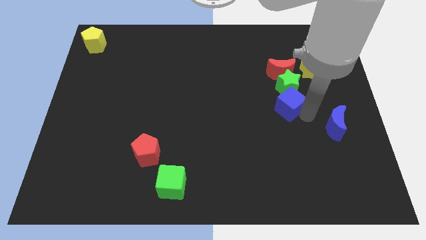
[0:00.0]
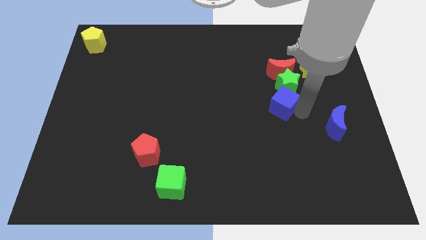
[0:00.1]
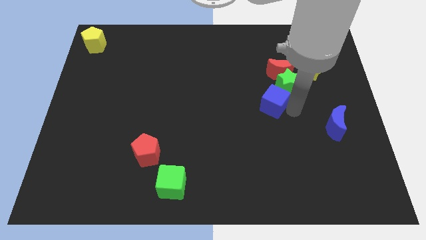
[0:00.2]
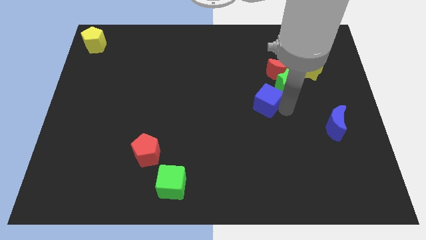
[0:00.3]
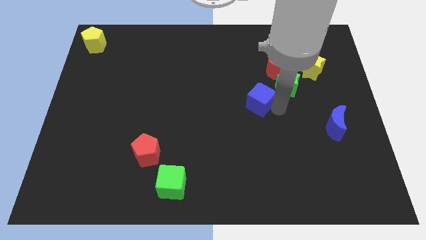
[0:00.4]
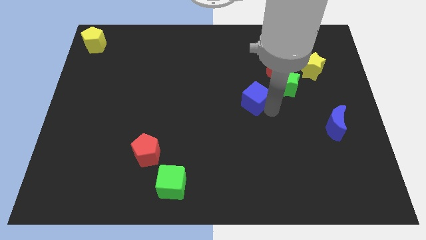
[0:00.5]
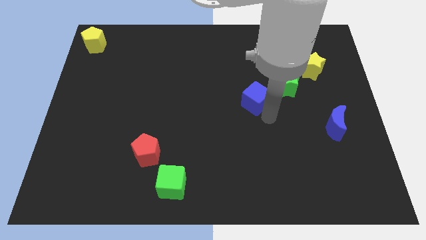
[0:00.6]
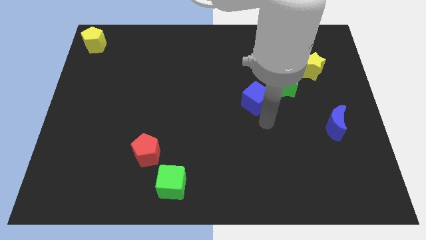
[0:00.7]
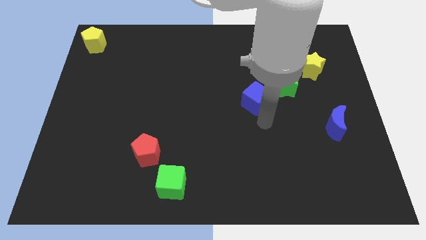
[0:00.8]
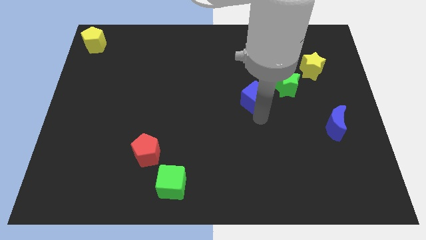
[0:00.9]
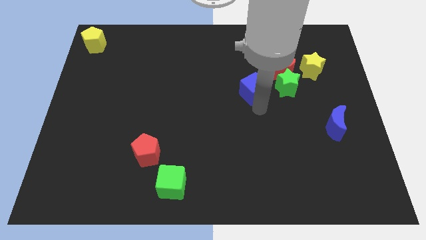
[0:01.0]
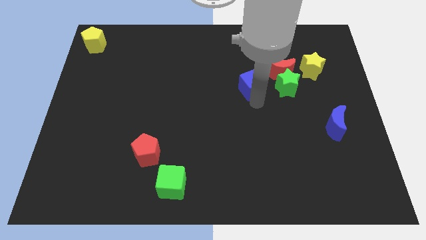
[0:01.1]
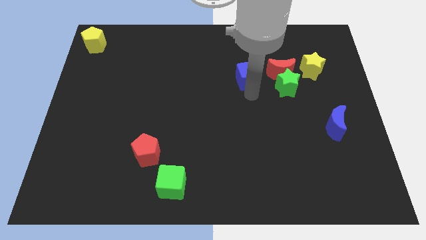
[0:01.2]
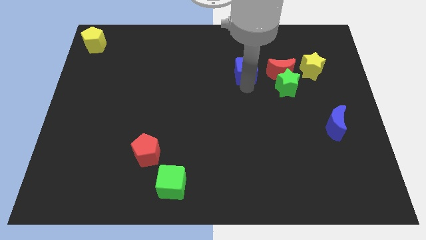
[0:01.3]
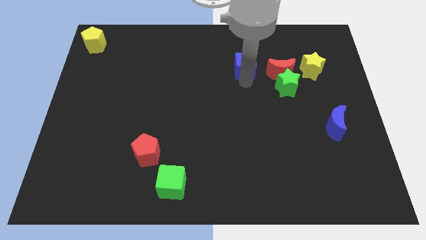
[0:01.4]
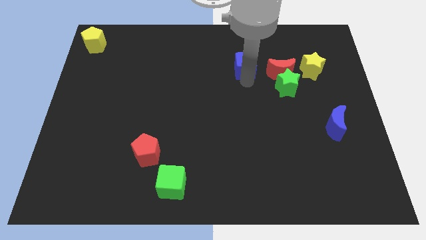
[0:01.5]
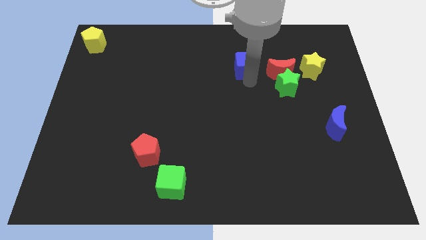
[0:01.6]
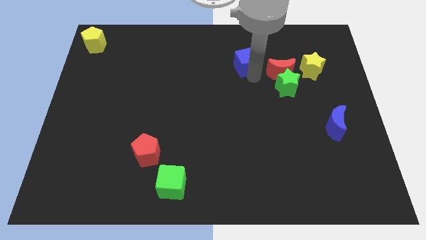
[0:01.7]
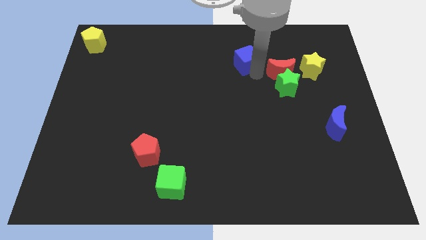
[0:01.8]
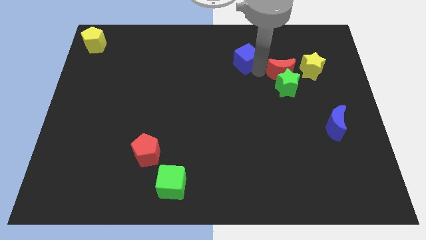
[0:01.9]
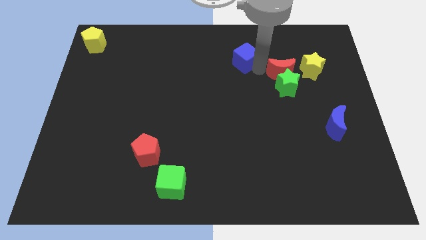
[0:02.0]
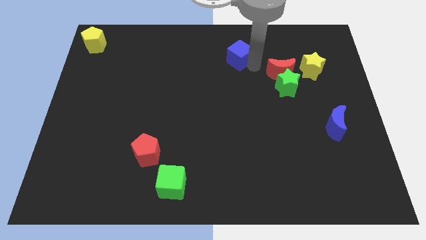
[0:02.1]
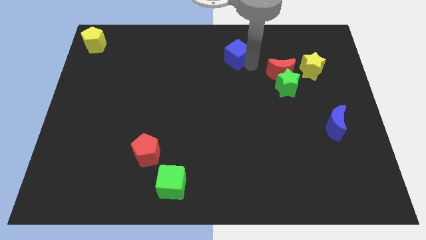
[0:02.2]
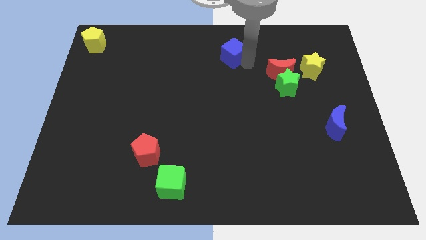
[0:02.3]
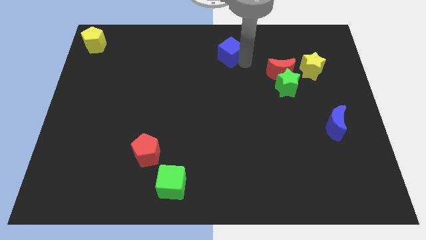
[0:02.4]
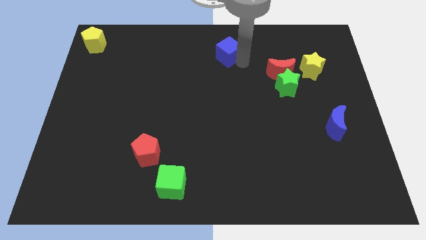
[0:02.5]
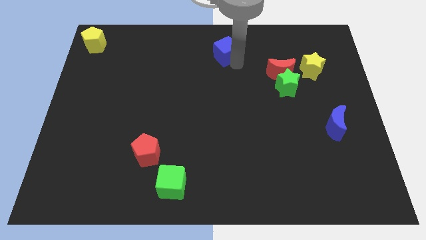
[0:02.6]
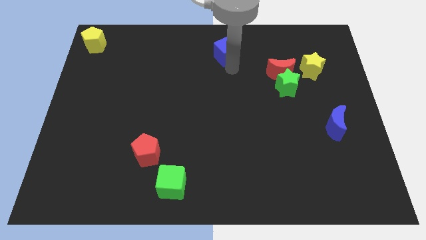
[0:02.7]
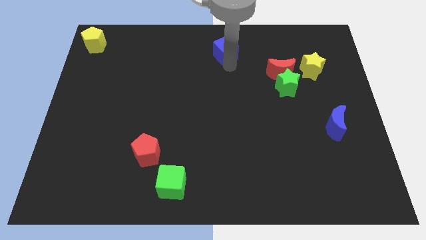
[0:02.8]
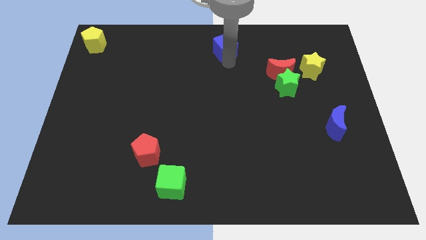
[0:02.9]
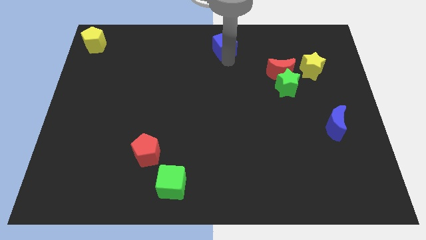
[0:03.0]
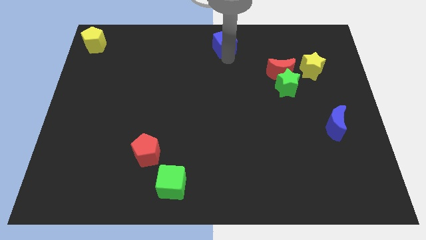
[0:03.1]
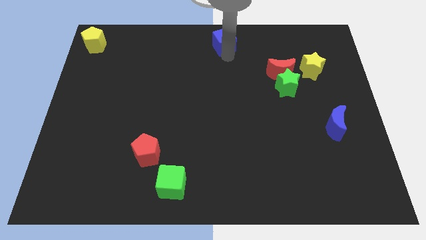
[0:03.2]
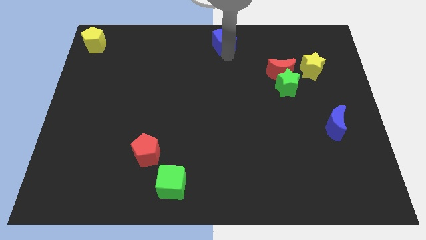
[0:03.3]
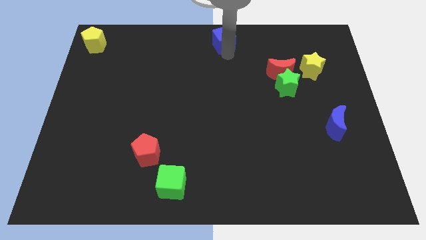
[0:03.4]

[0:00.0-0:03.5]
push blue cube towards top middle of the board

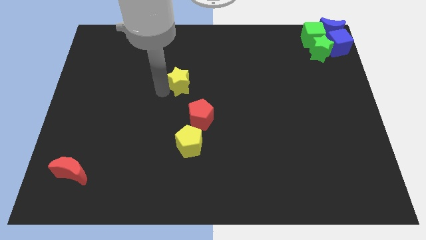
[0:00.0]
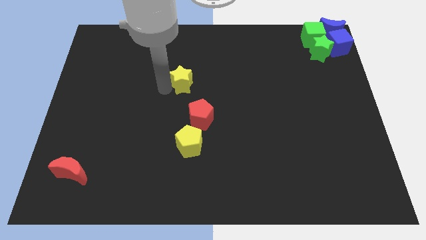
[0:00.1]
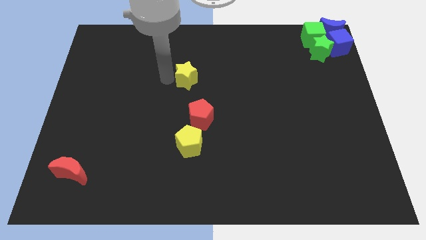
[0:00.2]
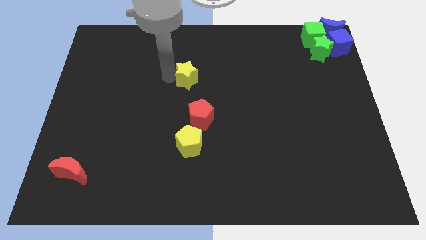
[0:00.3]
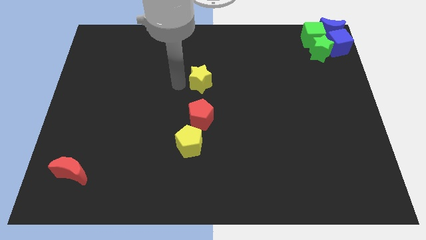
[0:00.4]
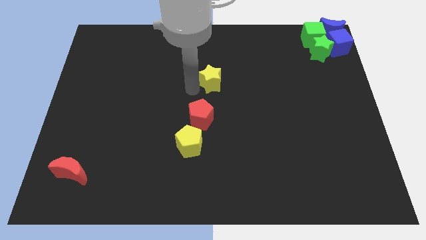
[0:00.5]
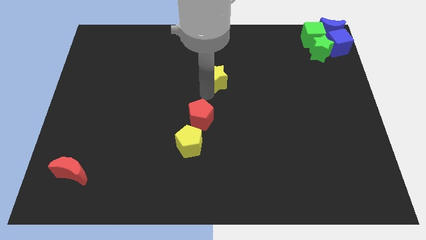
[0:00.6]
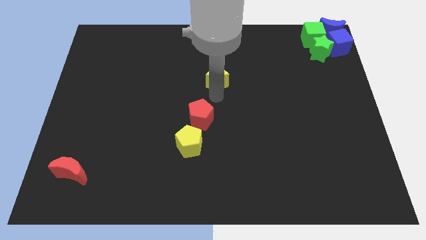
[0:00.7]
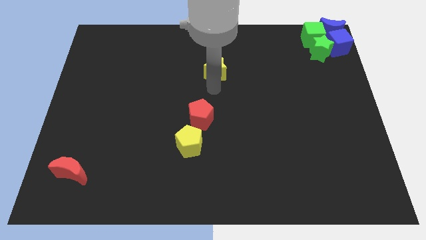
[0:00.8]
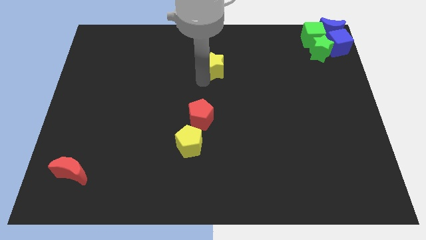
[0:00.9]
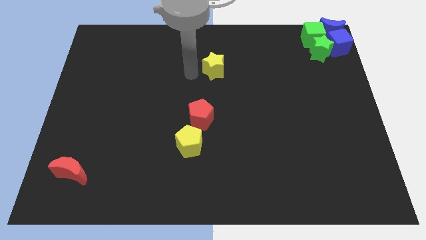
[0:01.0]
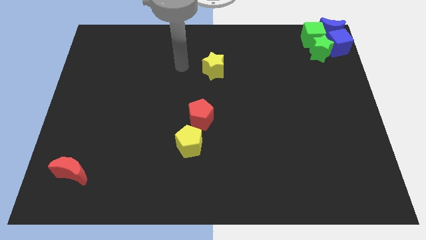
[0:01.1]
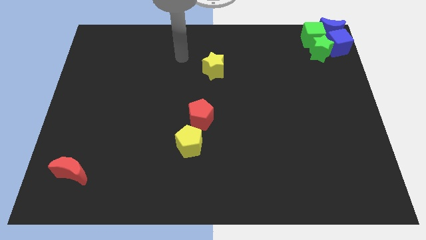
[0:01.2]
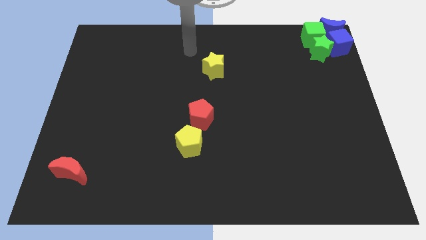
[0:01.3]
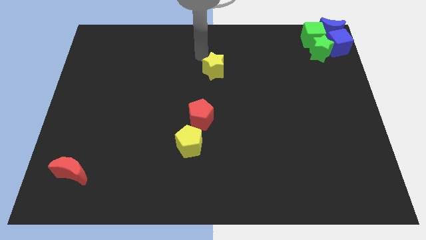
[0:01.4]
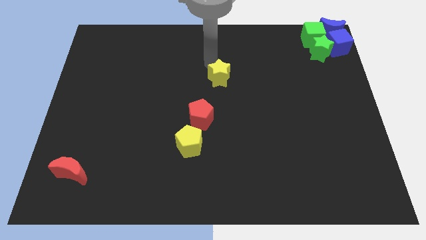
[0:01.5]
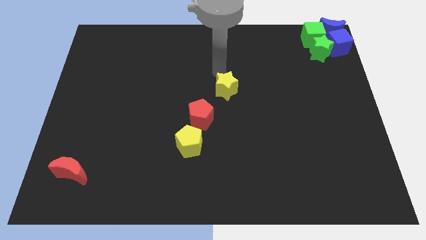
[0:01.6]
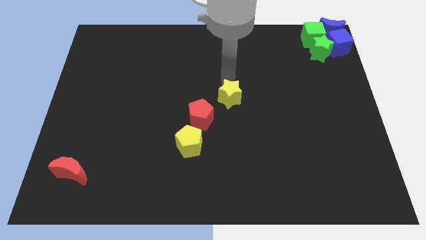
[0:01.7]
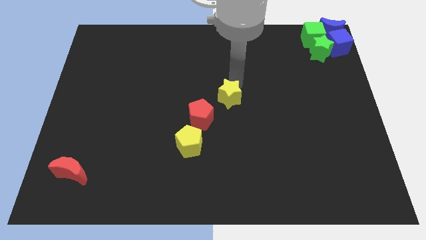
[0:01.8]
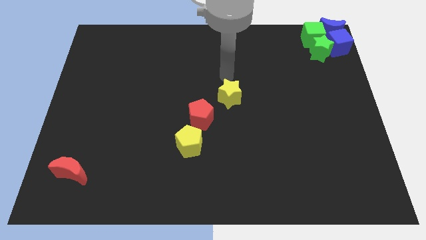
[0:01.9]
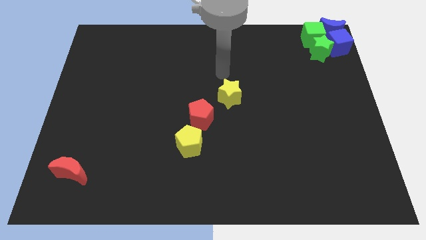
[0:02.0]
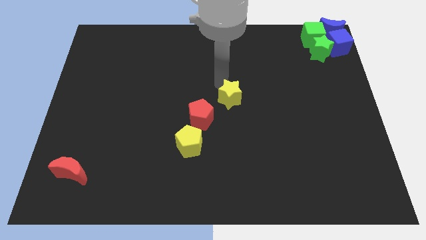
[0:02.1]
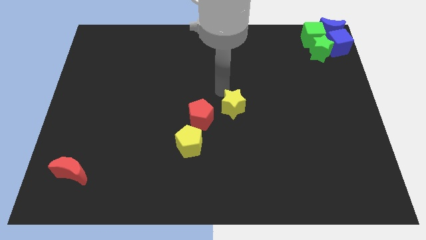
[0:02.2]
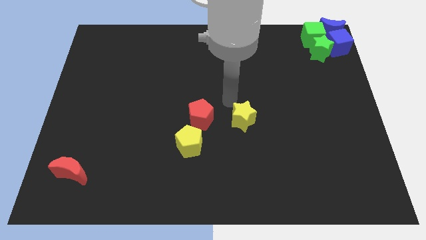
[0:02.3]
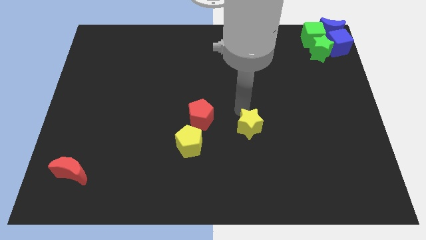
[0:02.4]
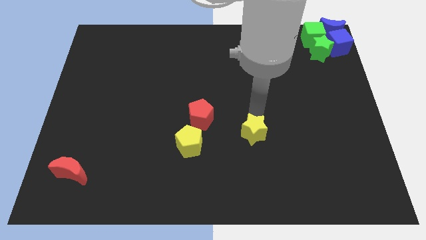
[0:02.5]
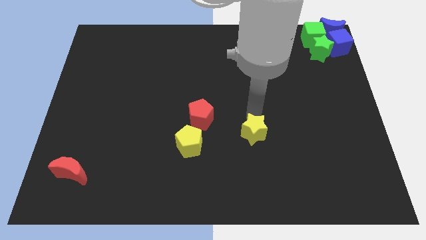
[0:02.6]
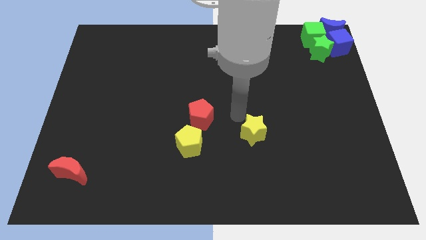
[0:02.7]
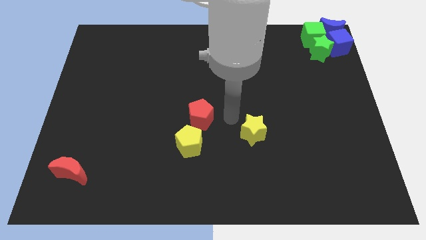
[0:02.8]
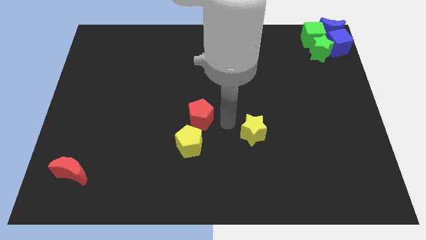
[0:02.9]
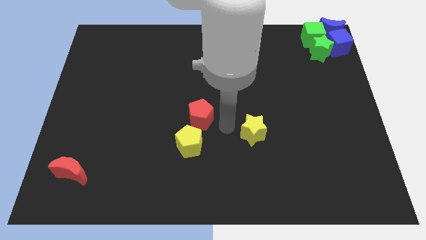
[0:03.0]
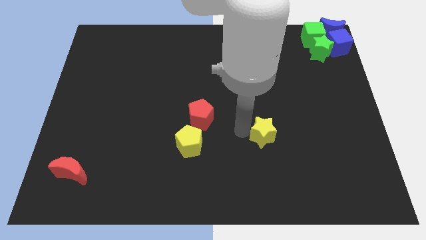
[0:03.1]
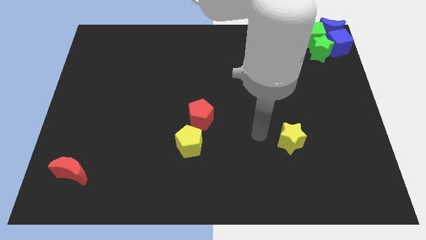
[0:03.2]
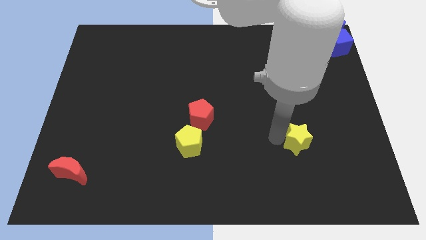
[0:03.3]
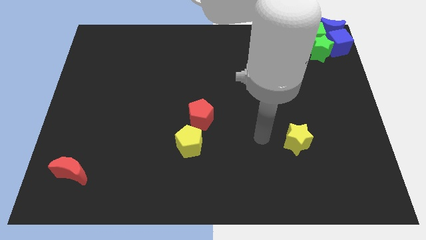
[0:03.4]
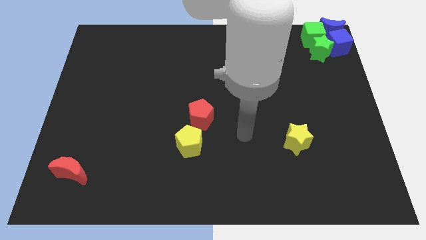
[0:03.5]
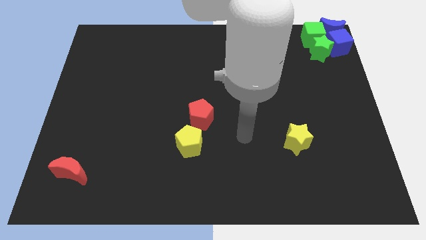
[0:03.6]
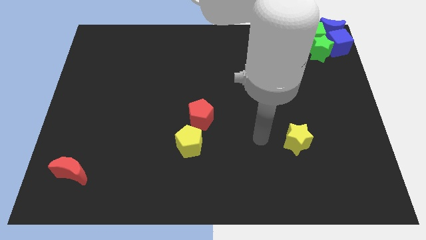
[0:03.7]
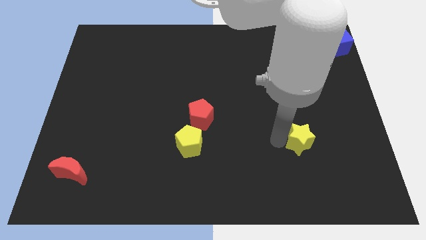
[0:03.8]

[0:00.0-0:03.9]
place the yellow star right to the yellow pentagon

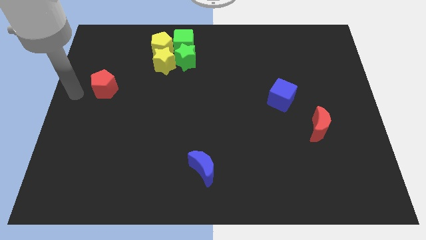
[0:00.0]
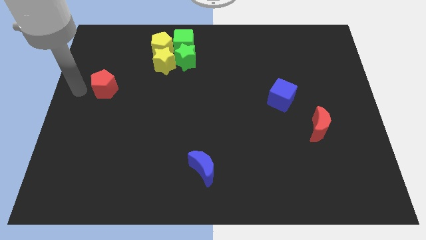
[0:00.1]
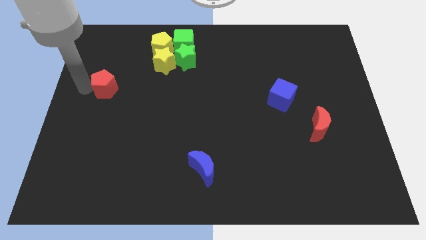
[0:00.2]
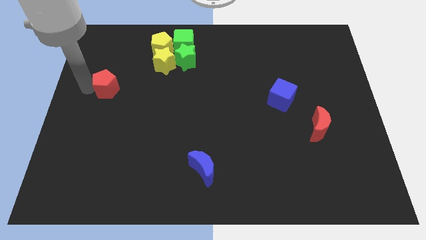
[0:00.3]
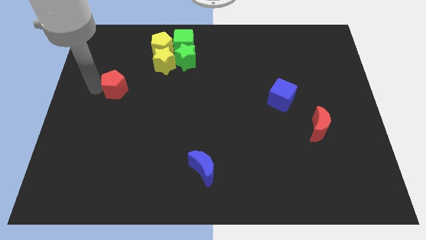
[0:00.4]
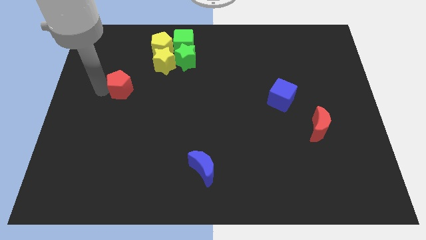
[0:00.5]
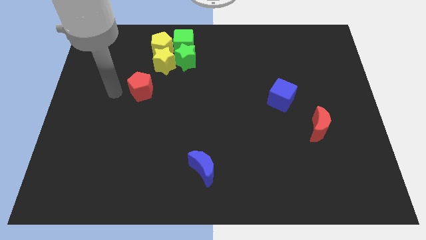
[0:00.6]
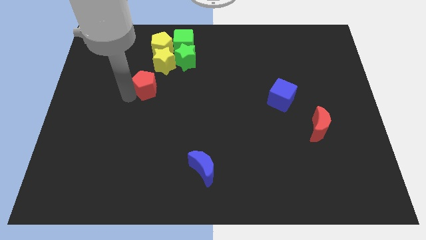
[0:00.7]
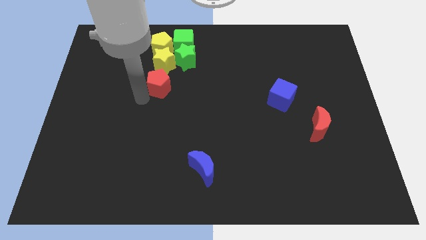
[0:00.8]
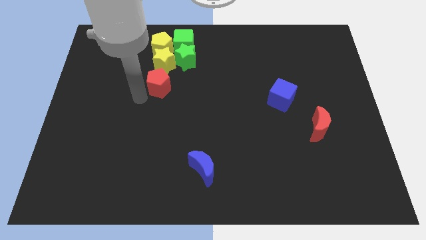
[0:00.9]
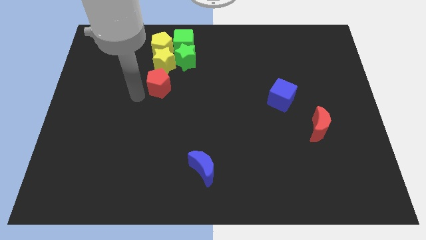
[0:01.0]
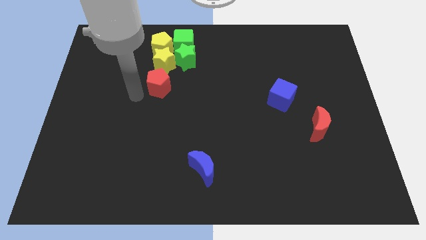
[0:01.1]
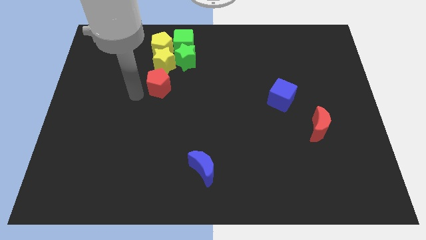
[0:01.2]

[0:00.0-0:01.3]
place the red pentagon to the bottom of yellow star

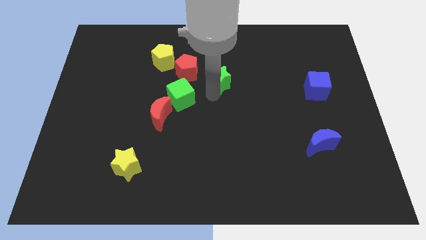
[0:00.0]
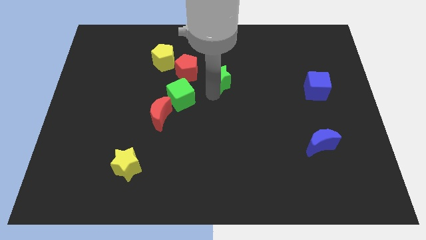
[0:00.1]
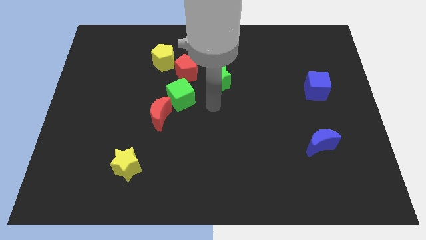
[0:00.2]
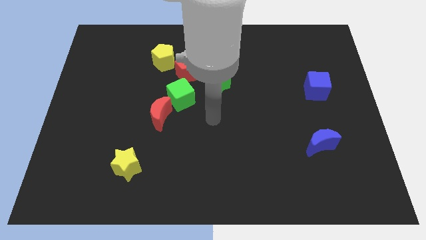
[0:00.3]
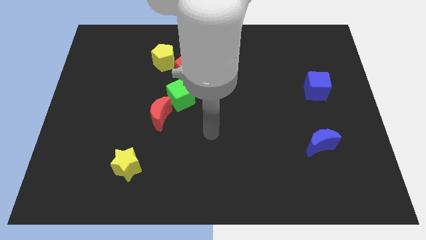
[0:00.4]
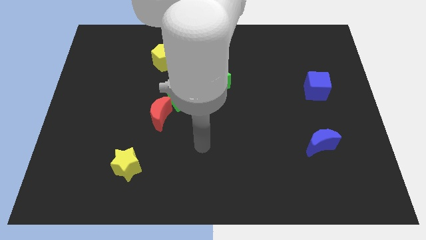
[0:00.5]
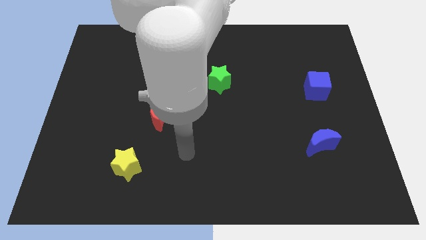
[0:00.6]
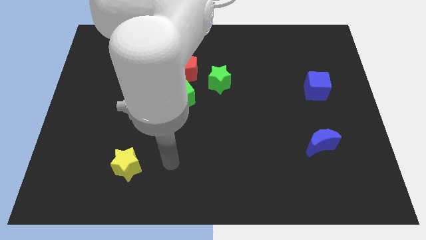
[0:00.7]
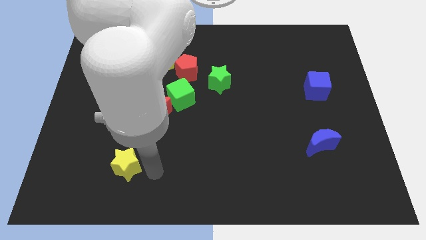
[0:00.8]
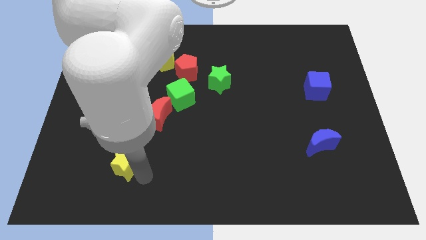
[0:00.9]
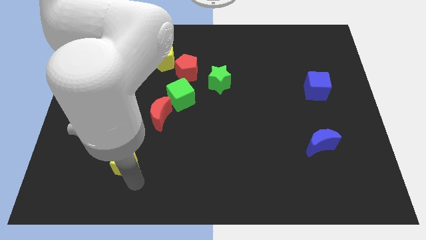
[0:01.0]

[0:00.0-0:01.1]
move arm near yellow star
